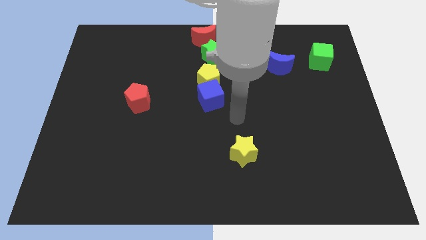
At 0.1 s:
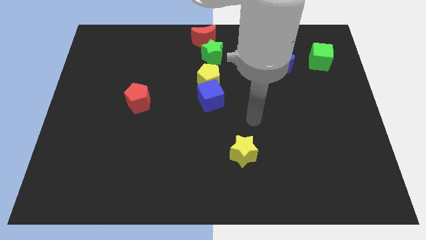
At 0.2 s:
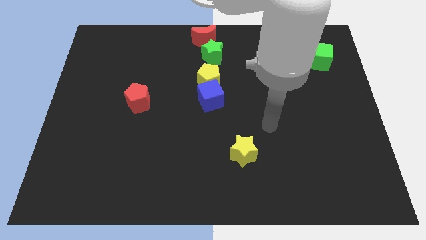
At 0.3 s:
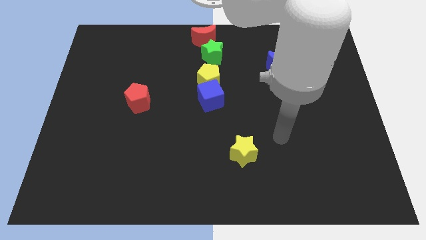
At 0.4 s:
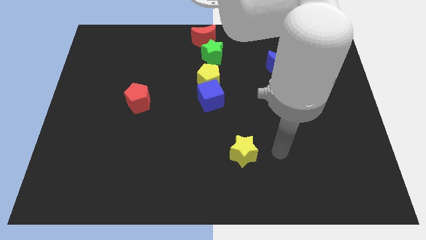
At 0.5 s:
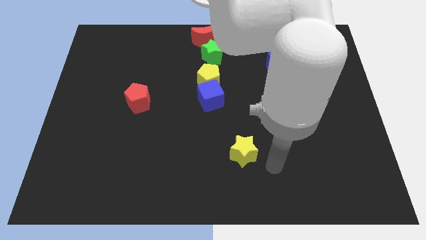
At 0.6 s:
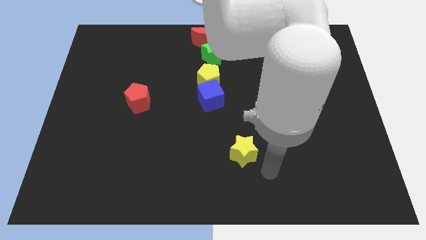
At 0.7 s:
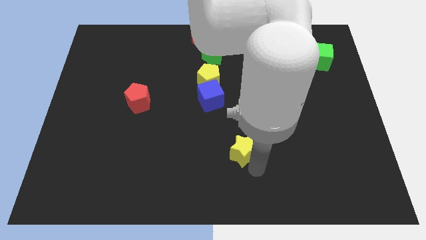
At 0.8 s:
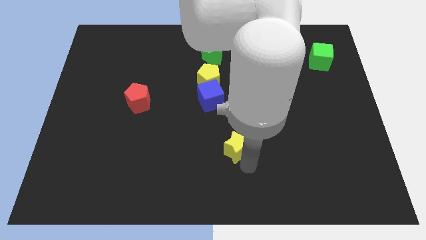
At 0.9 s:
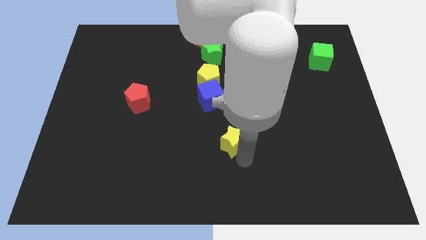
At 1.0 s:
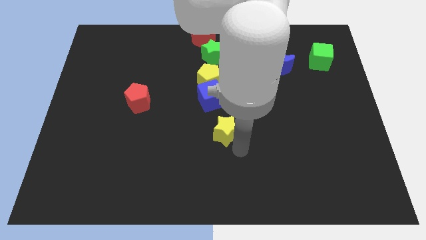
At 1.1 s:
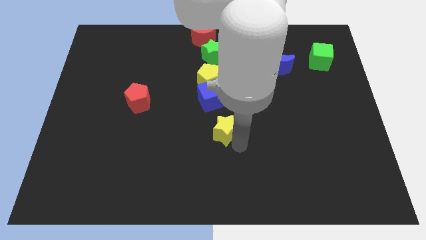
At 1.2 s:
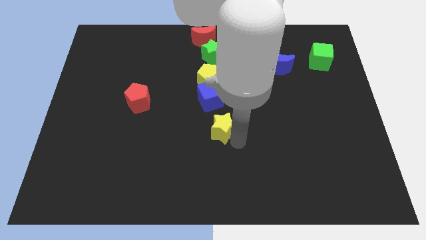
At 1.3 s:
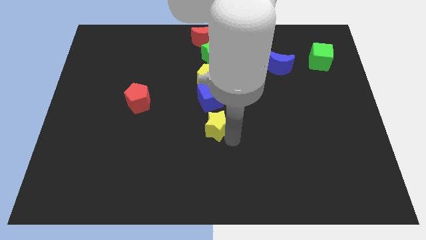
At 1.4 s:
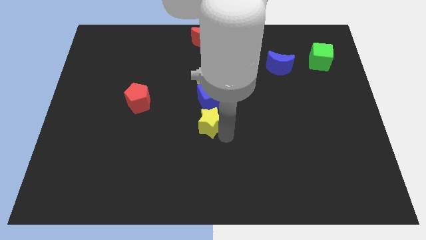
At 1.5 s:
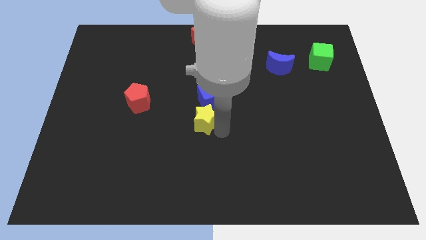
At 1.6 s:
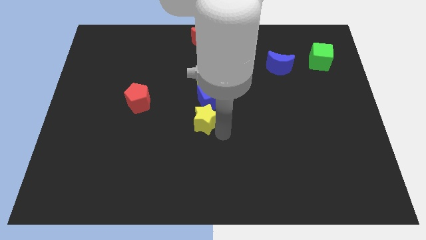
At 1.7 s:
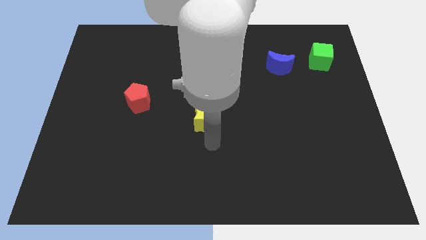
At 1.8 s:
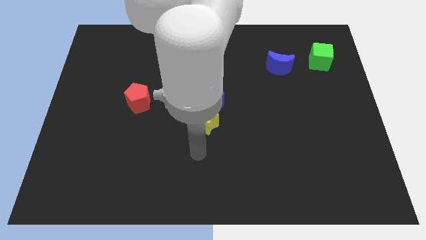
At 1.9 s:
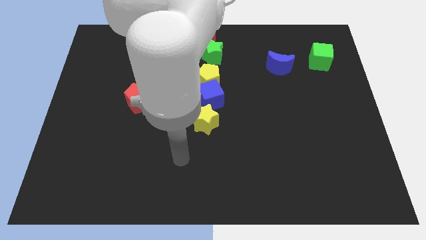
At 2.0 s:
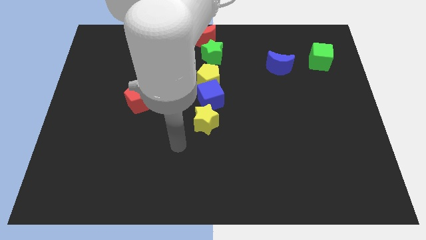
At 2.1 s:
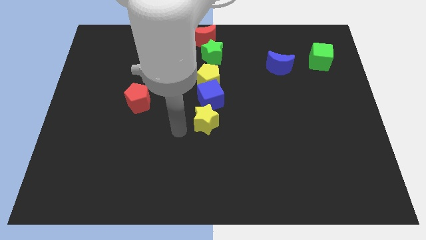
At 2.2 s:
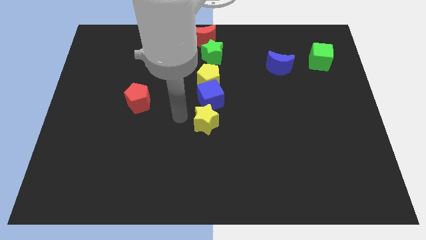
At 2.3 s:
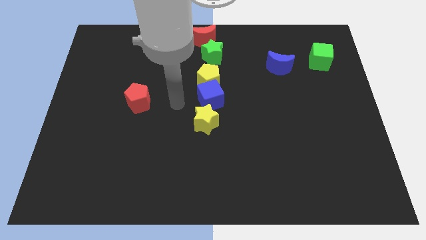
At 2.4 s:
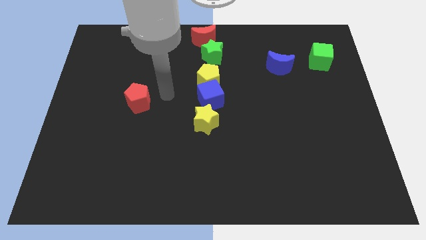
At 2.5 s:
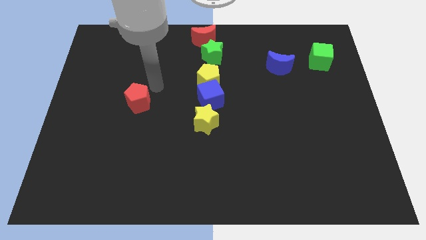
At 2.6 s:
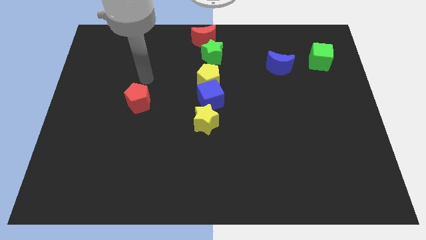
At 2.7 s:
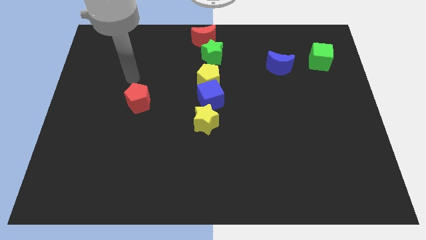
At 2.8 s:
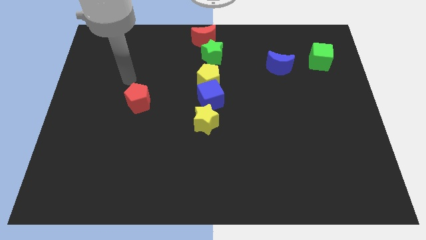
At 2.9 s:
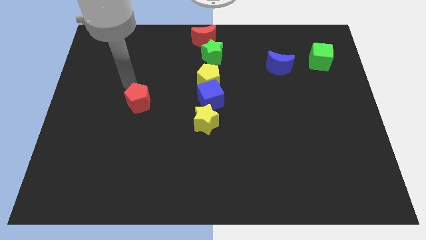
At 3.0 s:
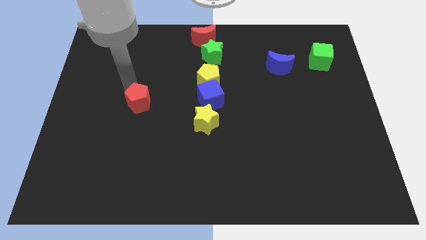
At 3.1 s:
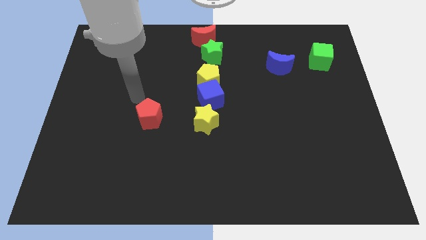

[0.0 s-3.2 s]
place yellow star to the center of the board

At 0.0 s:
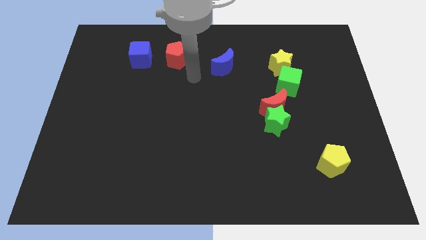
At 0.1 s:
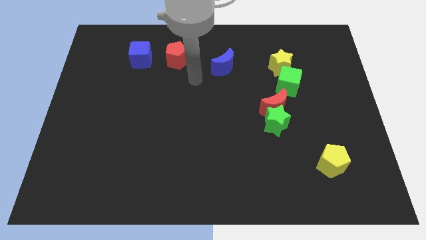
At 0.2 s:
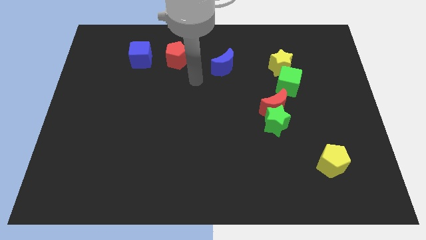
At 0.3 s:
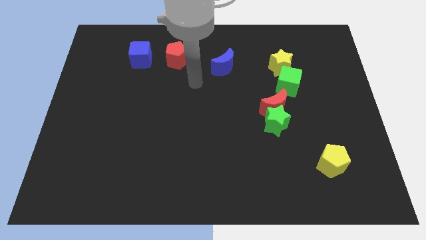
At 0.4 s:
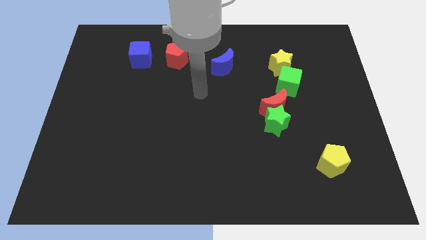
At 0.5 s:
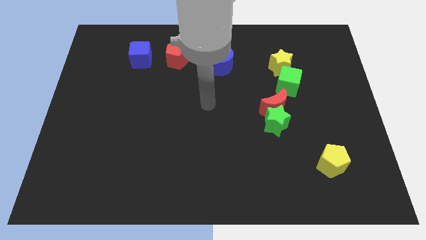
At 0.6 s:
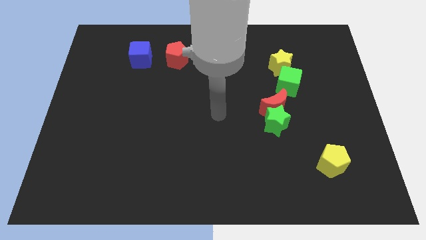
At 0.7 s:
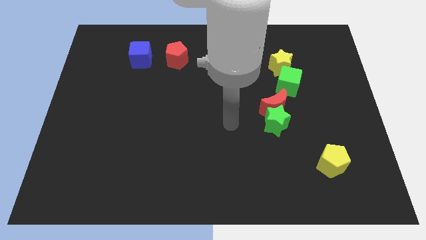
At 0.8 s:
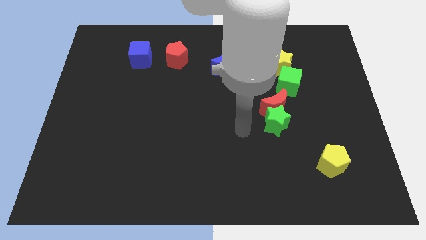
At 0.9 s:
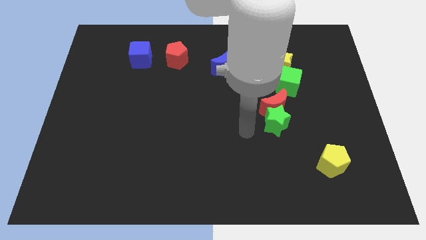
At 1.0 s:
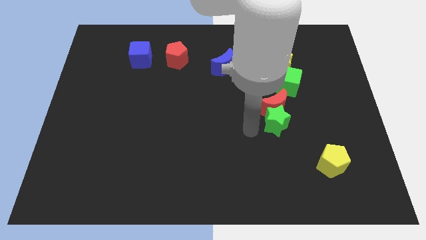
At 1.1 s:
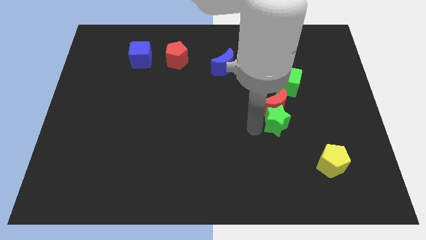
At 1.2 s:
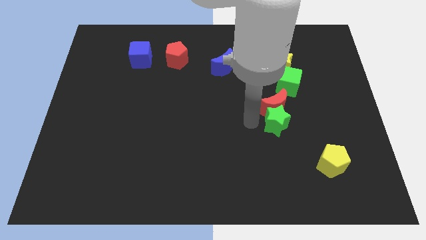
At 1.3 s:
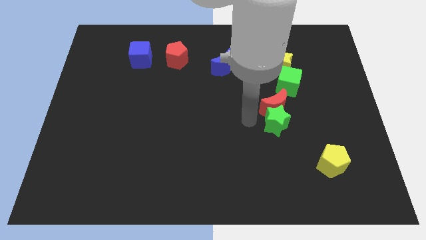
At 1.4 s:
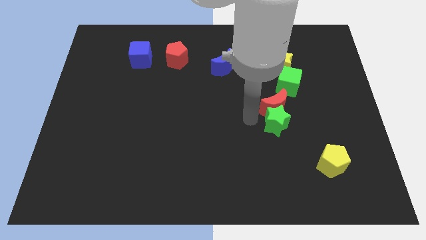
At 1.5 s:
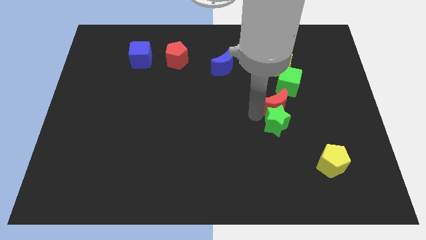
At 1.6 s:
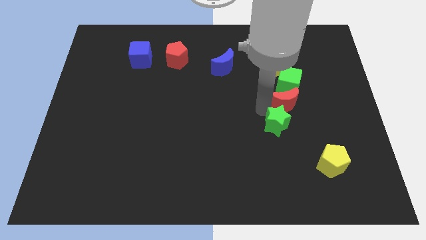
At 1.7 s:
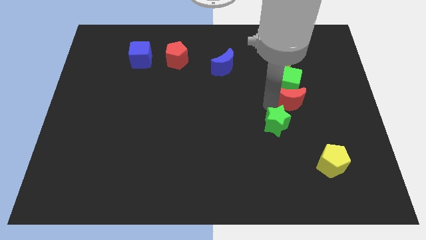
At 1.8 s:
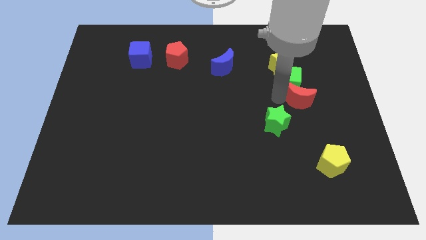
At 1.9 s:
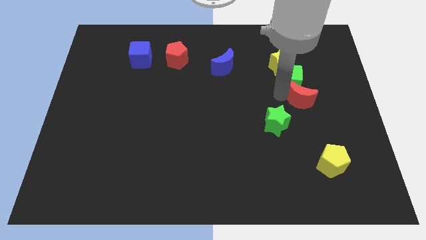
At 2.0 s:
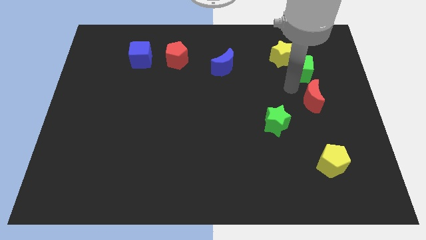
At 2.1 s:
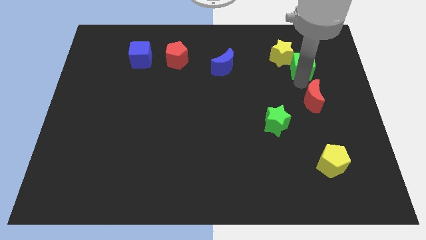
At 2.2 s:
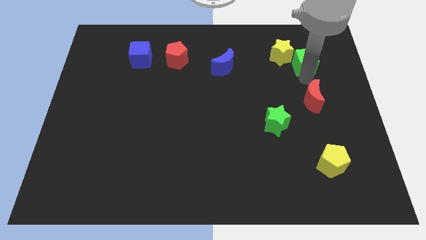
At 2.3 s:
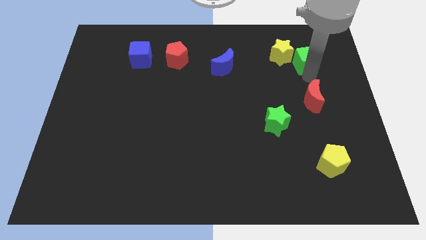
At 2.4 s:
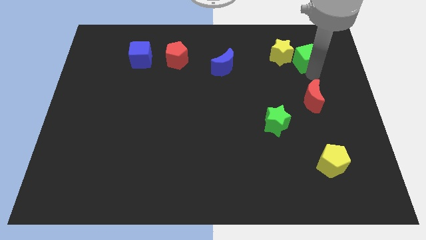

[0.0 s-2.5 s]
push the red crescent to the center right of the board

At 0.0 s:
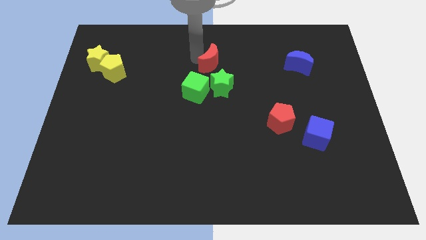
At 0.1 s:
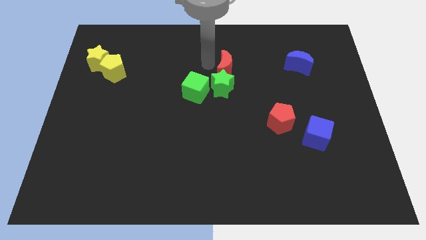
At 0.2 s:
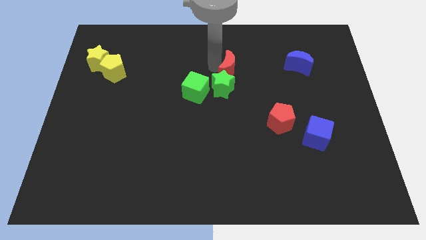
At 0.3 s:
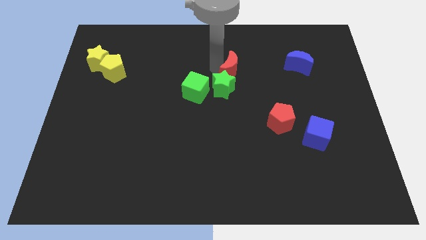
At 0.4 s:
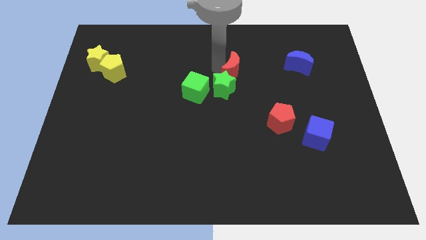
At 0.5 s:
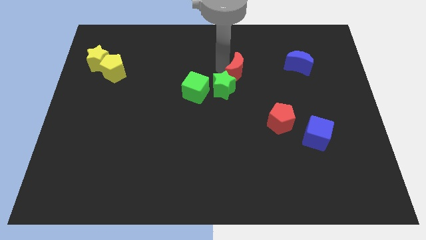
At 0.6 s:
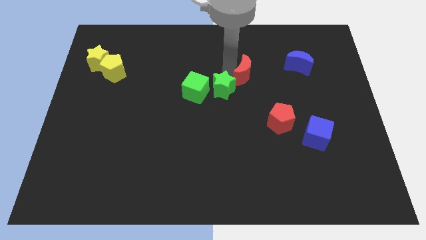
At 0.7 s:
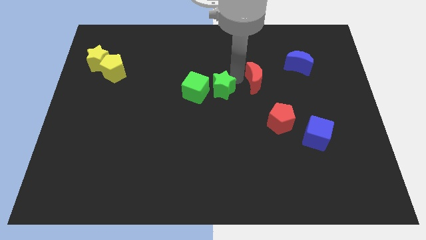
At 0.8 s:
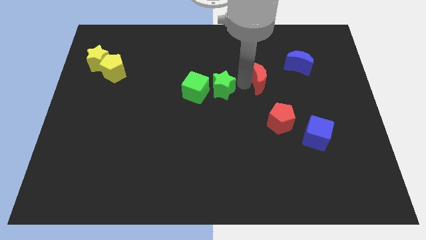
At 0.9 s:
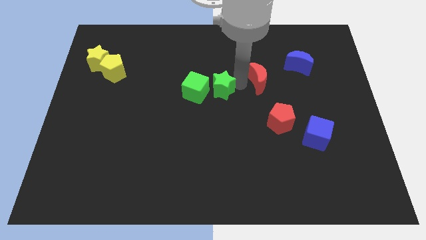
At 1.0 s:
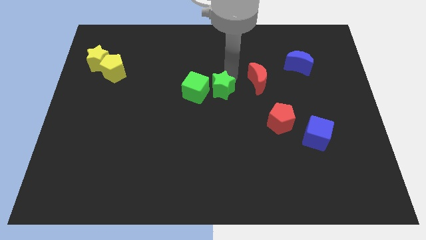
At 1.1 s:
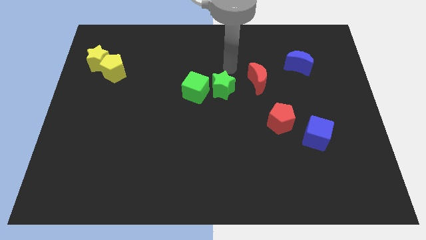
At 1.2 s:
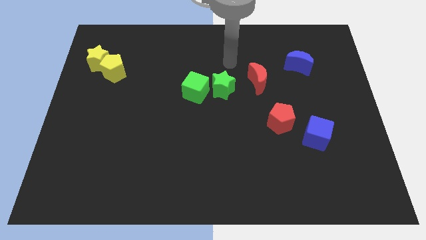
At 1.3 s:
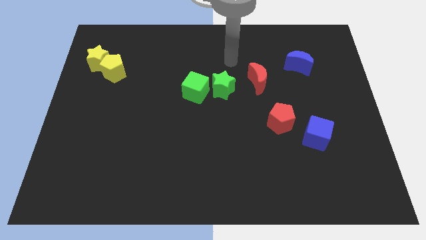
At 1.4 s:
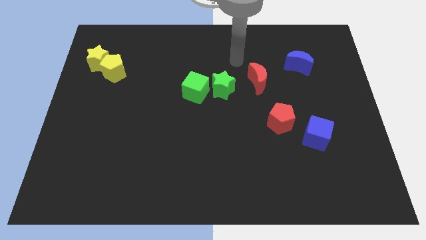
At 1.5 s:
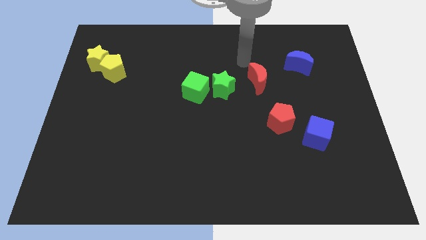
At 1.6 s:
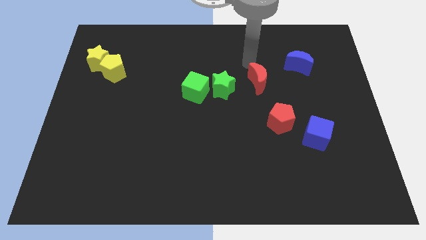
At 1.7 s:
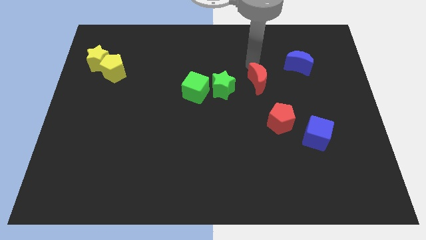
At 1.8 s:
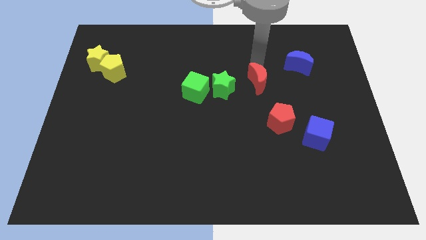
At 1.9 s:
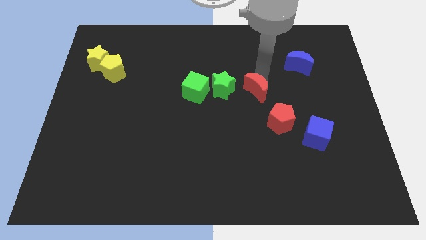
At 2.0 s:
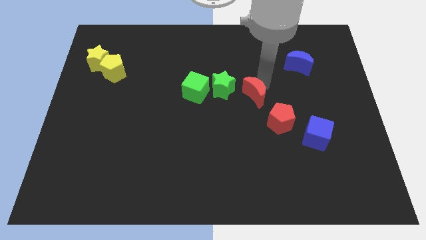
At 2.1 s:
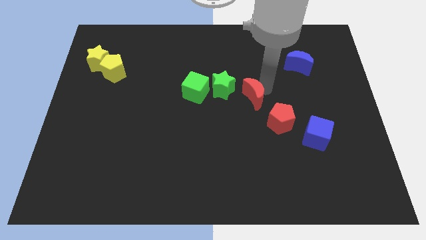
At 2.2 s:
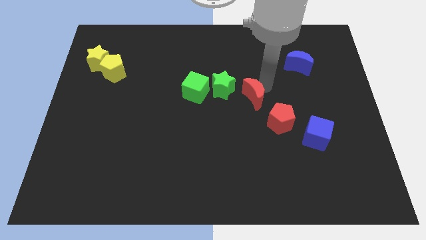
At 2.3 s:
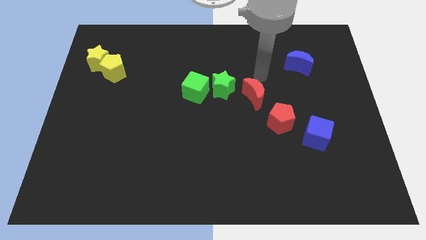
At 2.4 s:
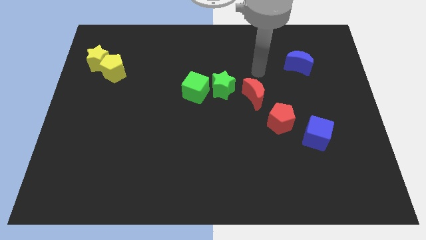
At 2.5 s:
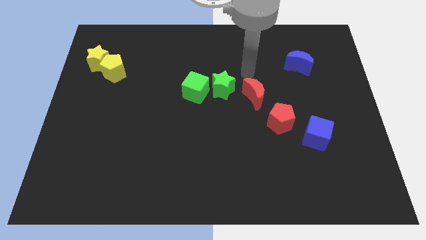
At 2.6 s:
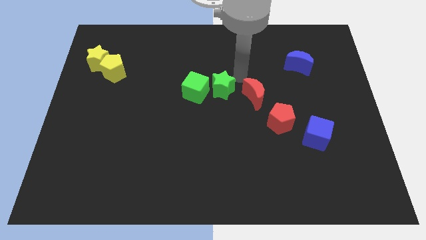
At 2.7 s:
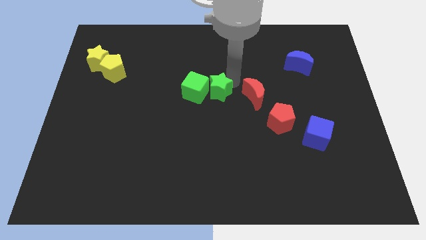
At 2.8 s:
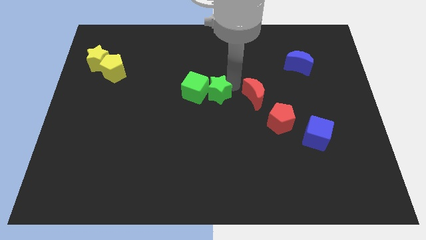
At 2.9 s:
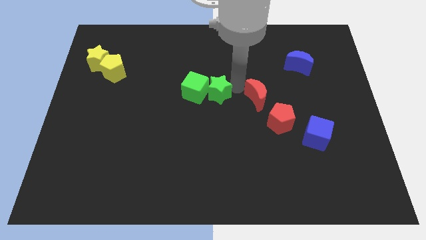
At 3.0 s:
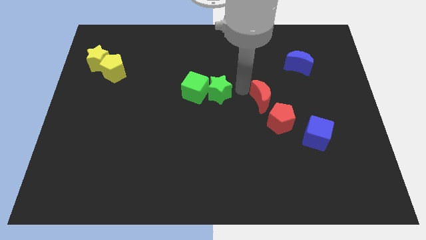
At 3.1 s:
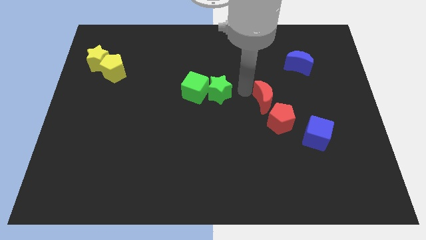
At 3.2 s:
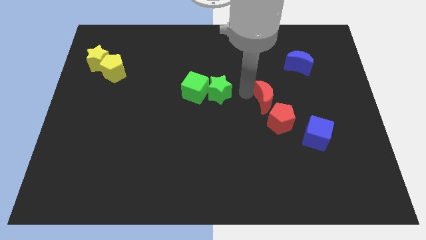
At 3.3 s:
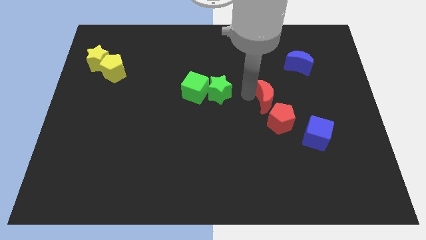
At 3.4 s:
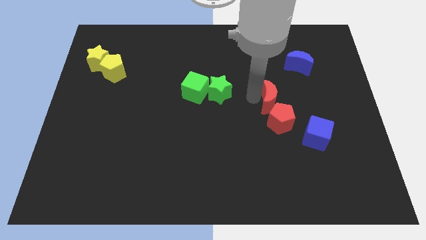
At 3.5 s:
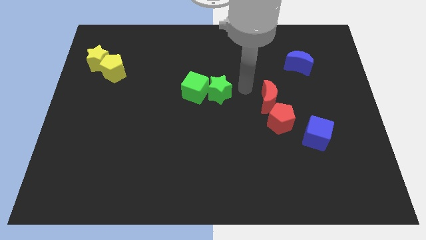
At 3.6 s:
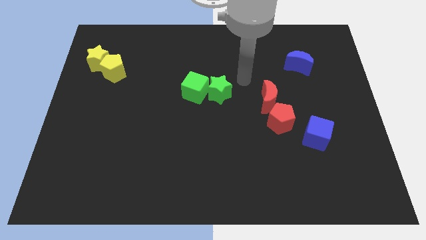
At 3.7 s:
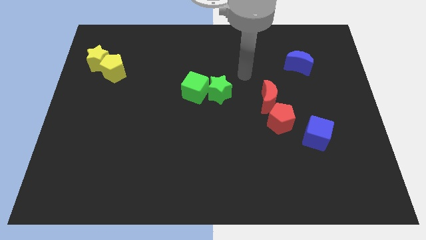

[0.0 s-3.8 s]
place red moon diagonal into red pentagon
